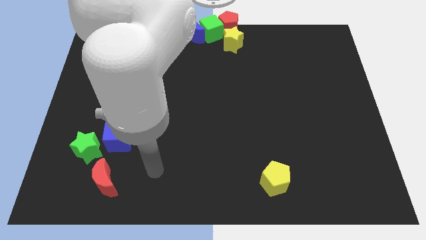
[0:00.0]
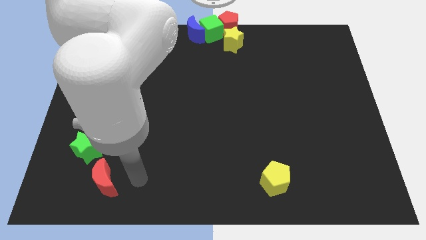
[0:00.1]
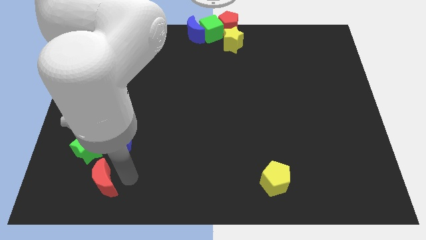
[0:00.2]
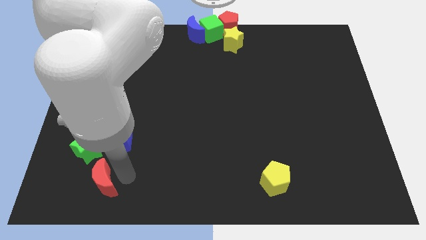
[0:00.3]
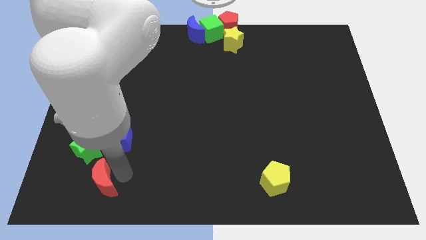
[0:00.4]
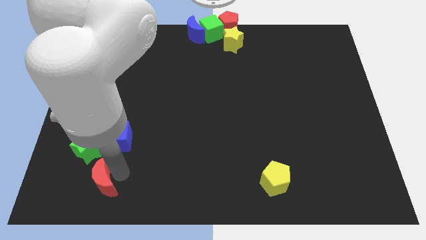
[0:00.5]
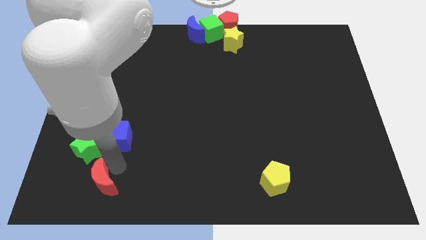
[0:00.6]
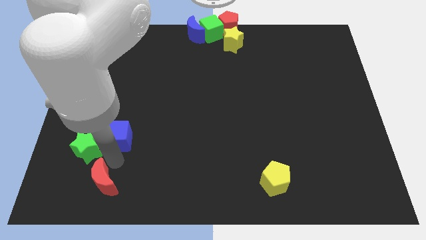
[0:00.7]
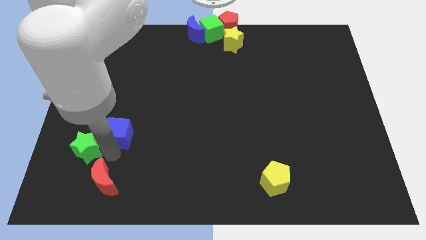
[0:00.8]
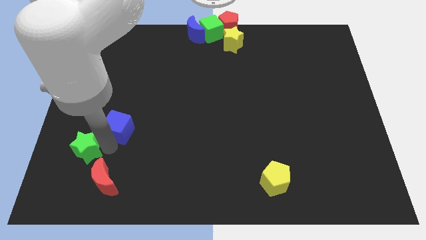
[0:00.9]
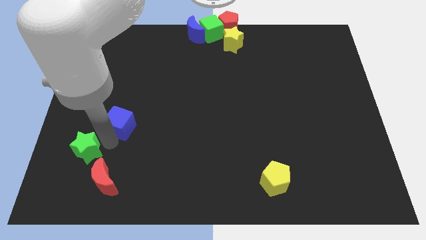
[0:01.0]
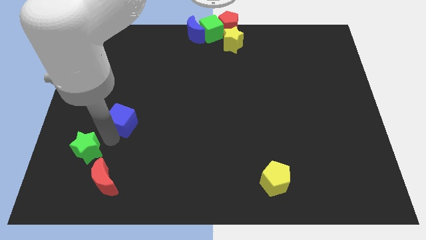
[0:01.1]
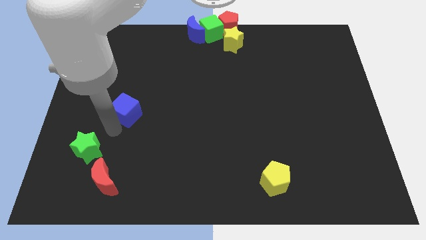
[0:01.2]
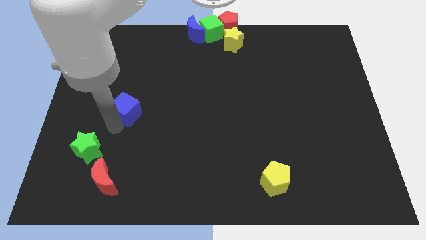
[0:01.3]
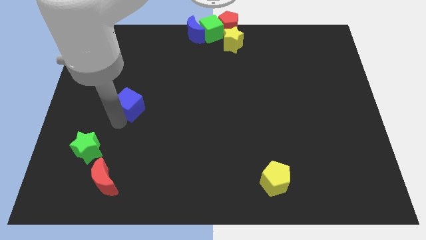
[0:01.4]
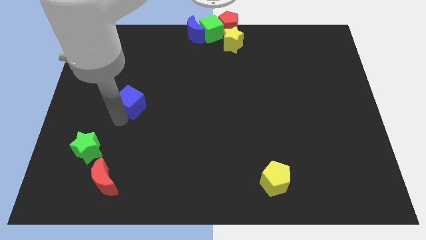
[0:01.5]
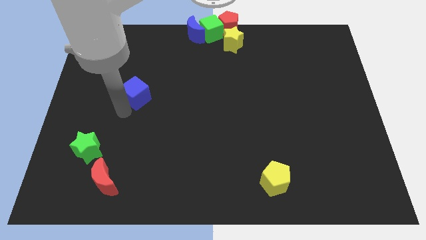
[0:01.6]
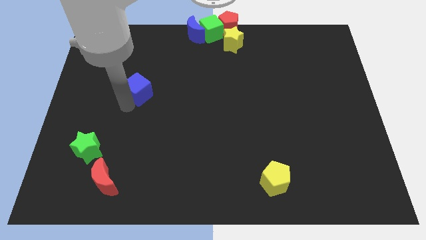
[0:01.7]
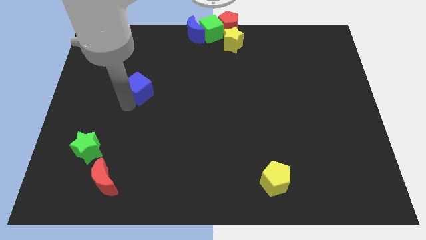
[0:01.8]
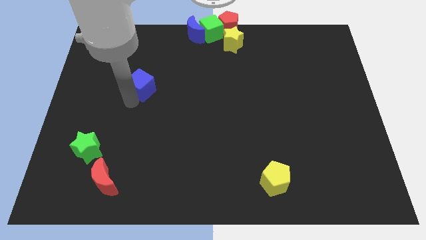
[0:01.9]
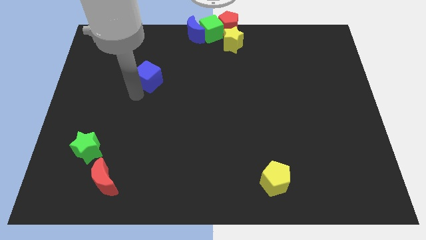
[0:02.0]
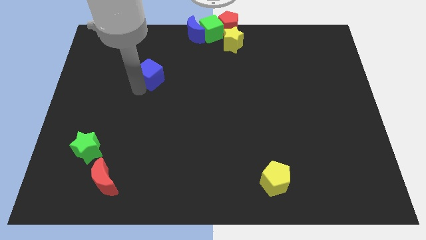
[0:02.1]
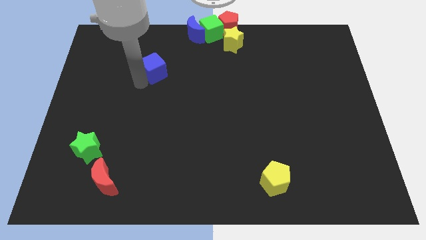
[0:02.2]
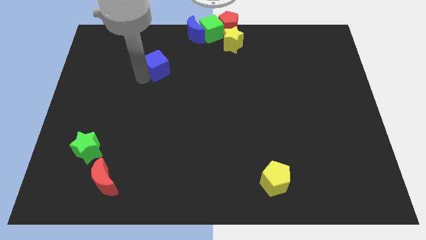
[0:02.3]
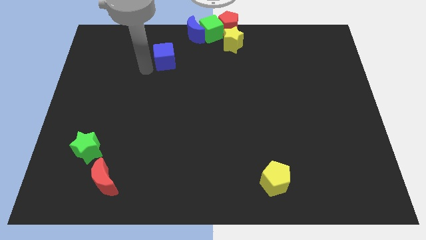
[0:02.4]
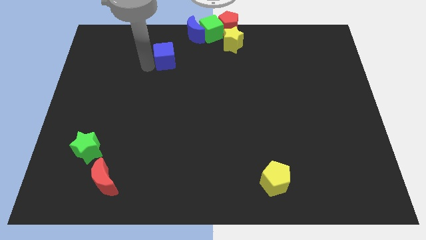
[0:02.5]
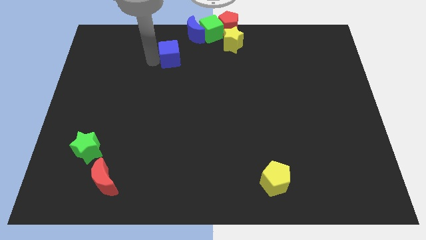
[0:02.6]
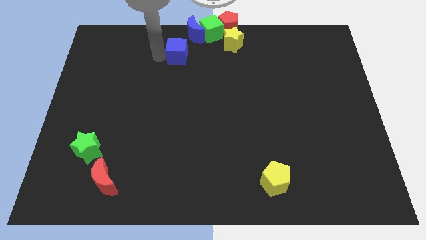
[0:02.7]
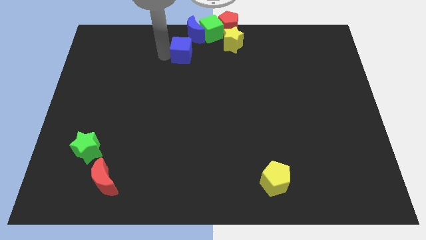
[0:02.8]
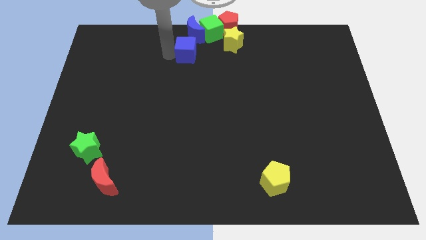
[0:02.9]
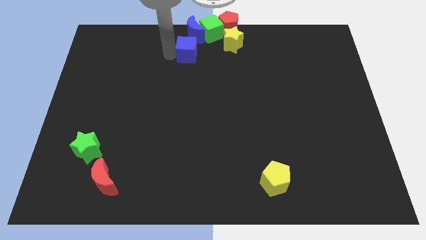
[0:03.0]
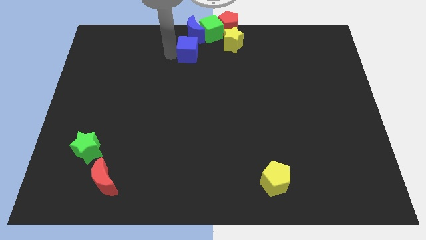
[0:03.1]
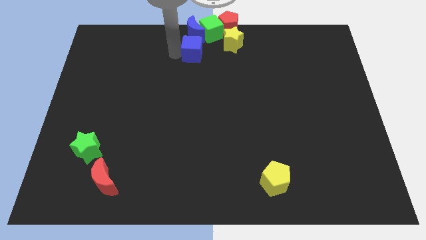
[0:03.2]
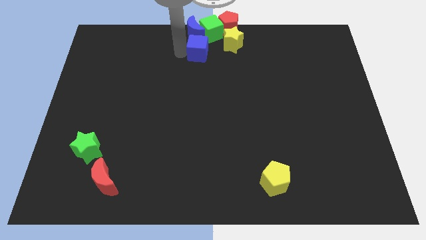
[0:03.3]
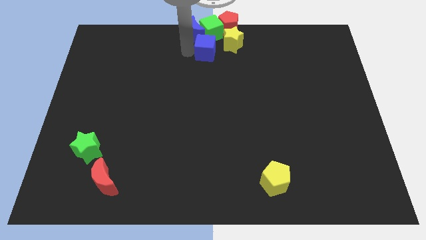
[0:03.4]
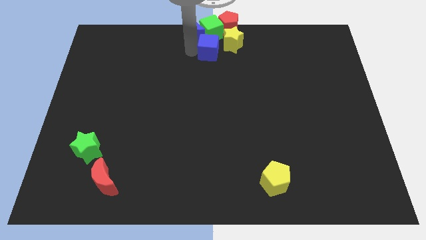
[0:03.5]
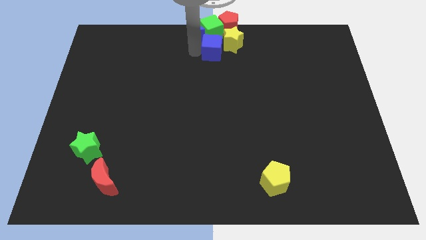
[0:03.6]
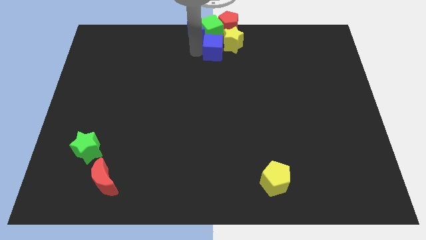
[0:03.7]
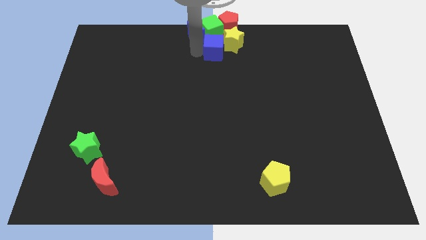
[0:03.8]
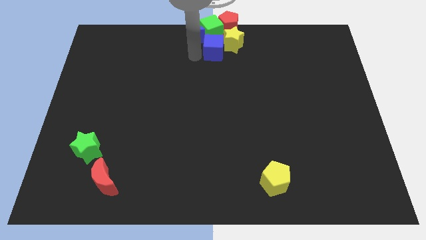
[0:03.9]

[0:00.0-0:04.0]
place the blue cube down to the green cube

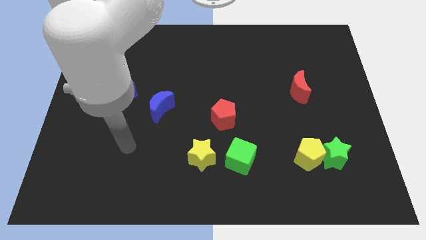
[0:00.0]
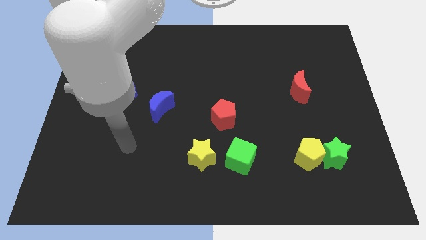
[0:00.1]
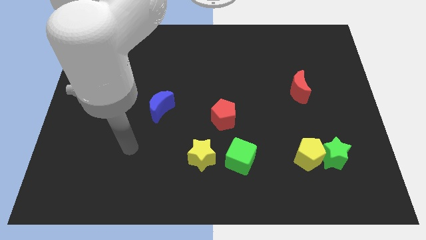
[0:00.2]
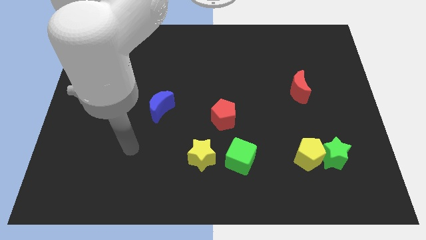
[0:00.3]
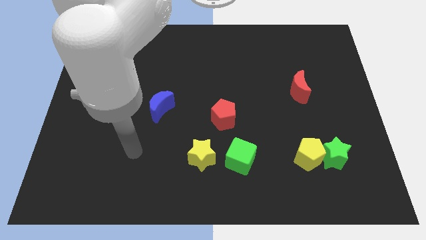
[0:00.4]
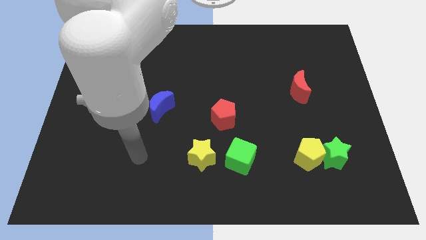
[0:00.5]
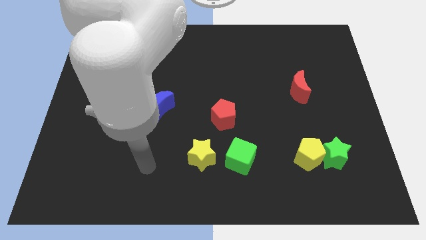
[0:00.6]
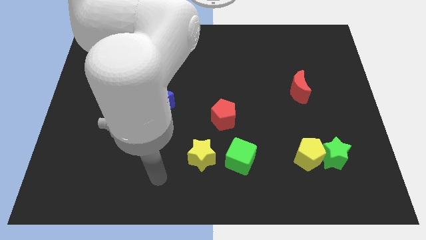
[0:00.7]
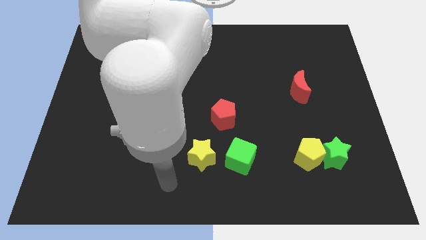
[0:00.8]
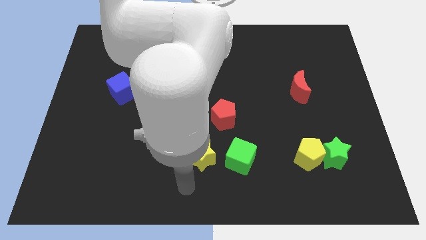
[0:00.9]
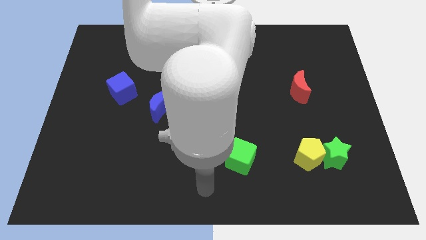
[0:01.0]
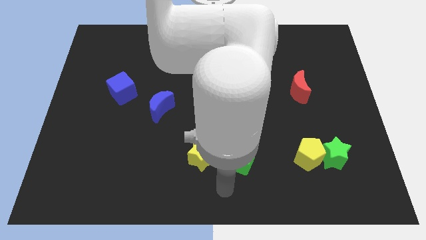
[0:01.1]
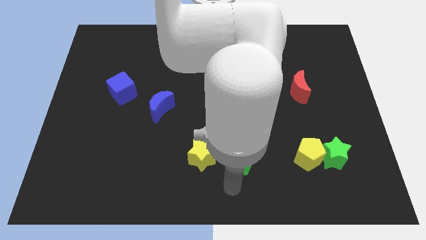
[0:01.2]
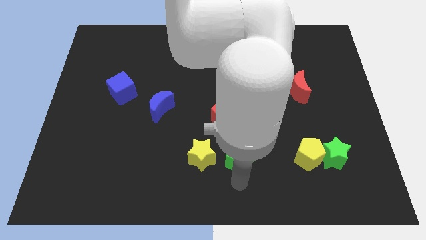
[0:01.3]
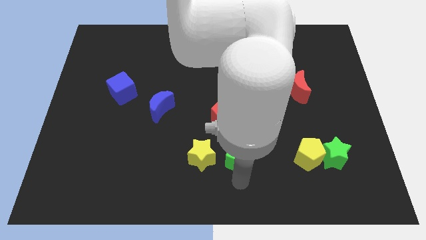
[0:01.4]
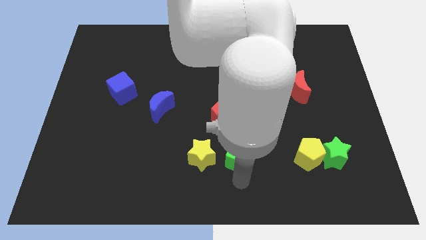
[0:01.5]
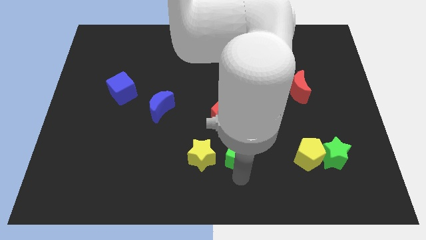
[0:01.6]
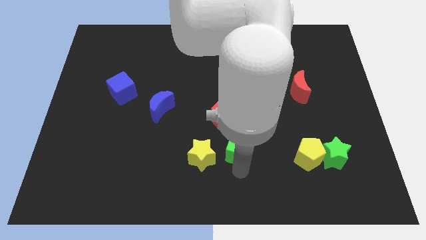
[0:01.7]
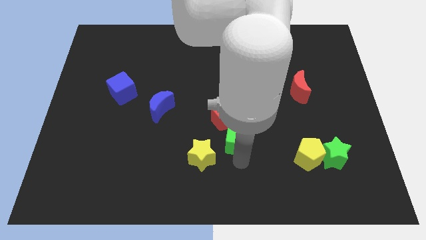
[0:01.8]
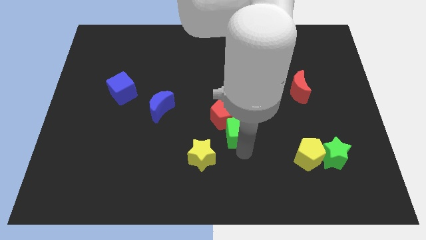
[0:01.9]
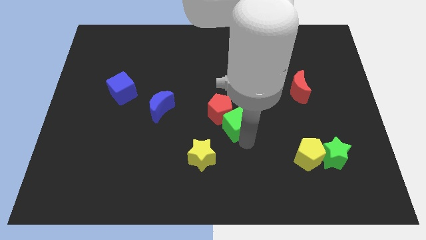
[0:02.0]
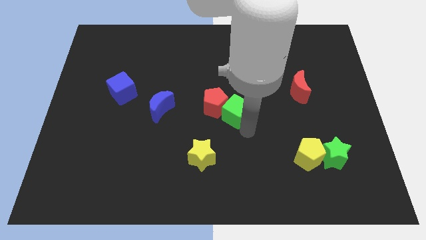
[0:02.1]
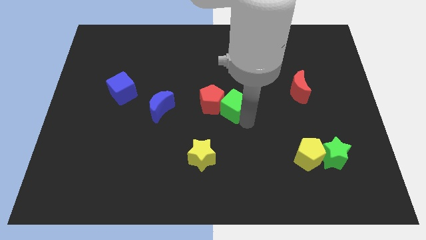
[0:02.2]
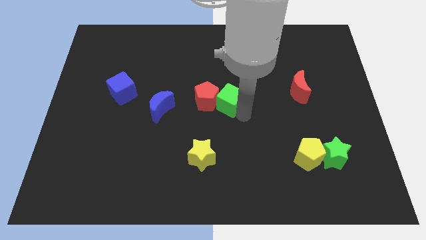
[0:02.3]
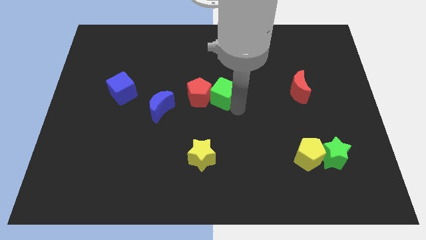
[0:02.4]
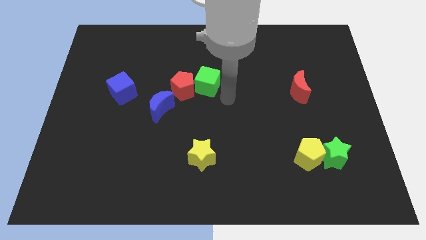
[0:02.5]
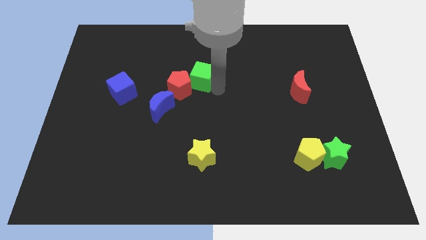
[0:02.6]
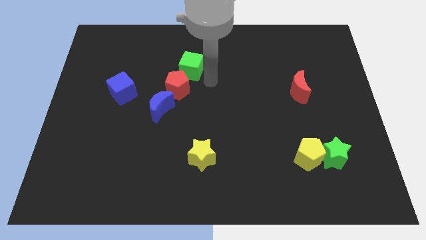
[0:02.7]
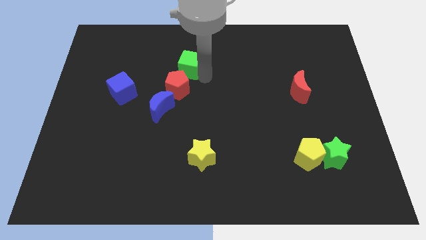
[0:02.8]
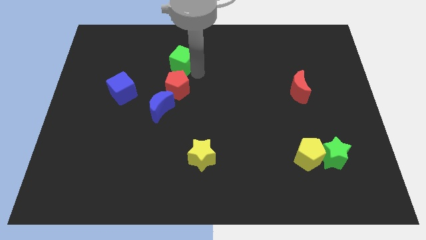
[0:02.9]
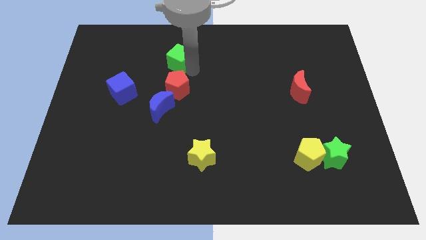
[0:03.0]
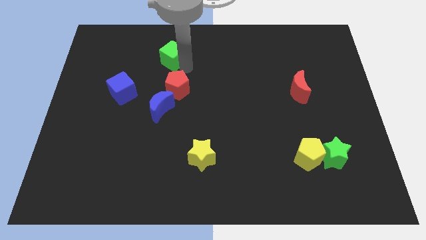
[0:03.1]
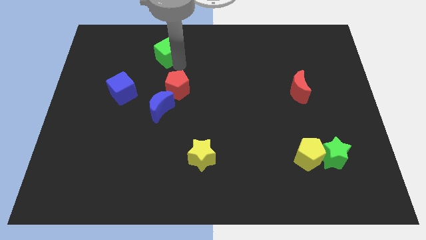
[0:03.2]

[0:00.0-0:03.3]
place the green cube at the top of the red pentagon

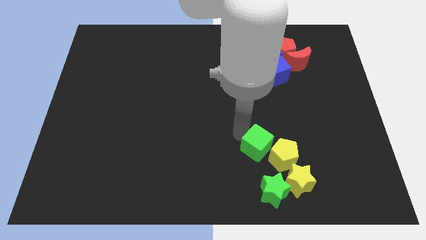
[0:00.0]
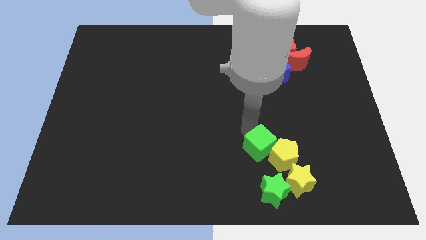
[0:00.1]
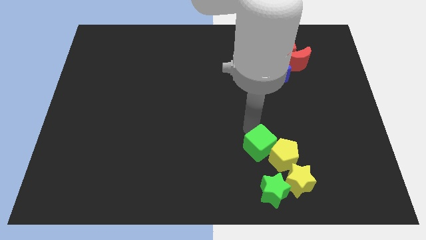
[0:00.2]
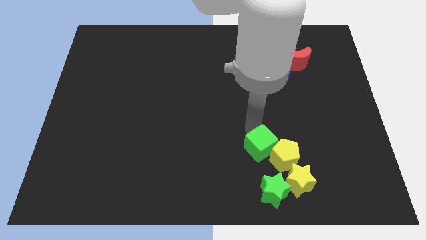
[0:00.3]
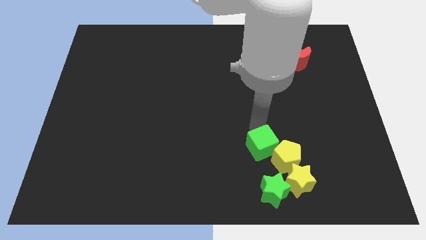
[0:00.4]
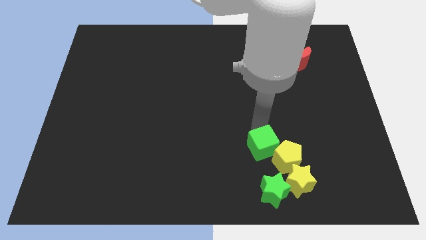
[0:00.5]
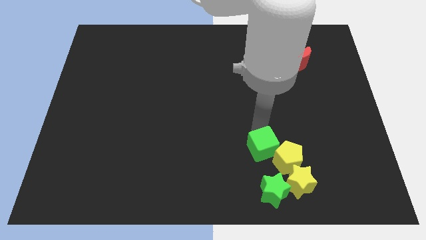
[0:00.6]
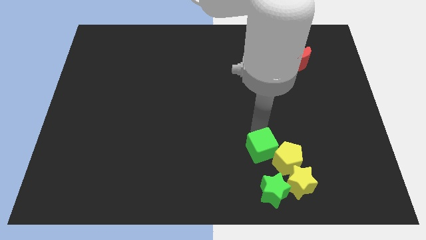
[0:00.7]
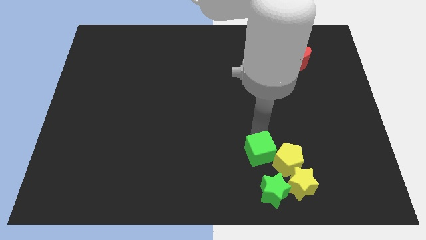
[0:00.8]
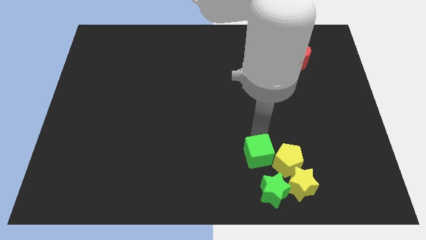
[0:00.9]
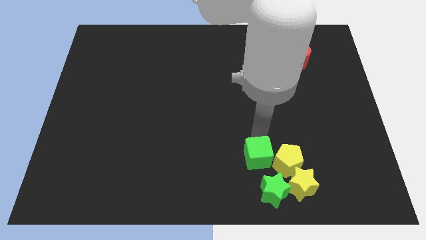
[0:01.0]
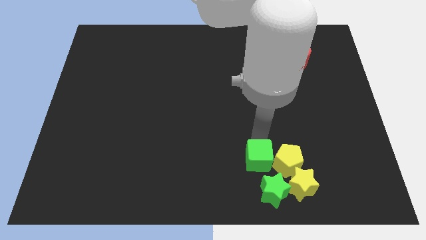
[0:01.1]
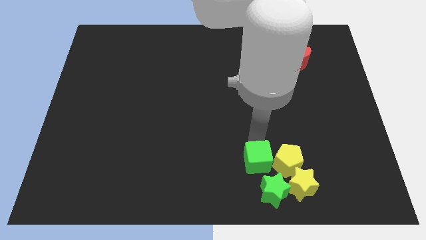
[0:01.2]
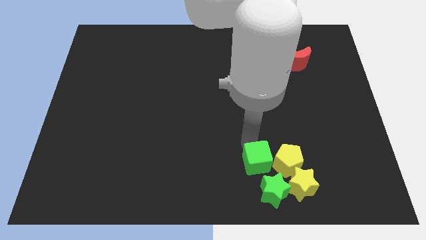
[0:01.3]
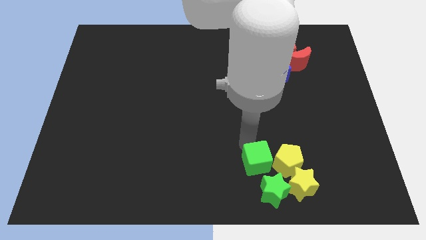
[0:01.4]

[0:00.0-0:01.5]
push the green cube into the yellow pentagon

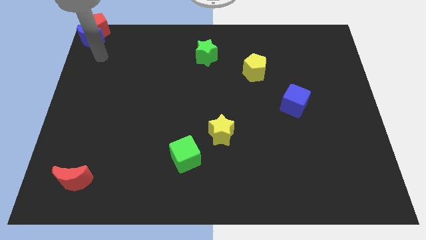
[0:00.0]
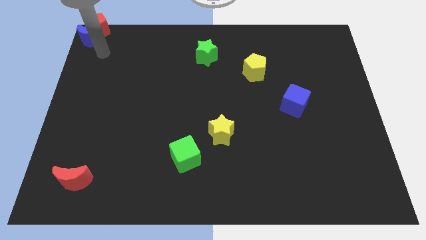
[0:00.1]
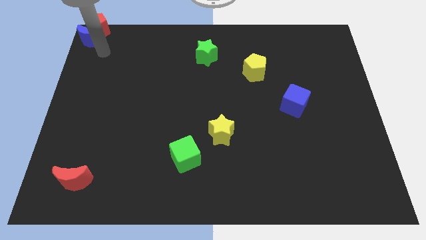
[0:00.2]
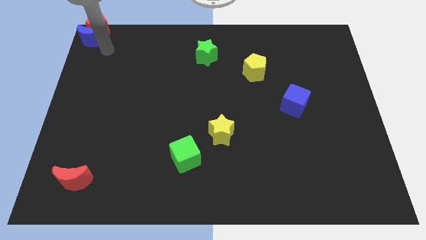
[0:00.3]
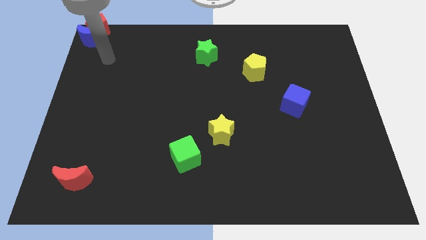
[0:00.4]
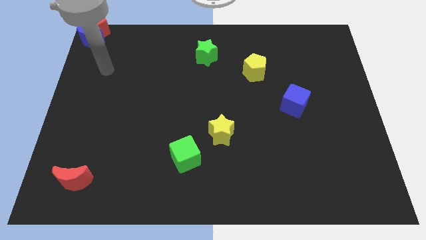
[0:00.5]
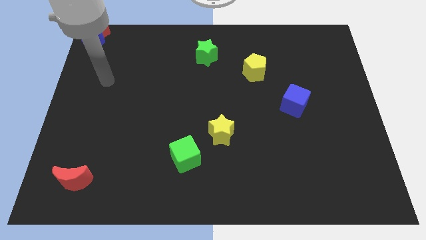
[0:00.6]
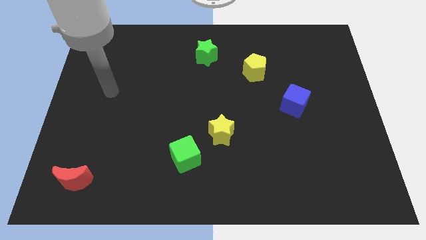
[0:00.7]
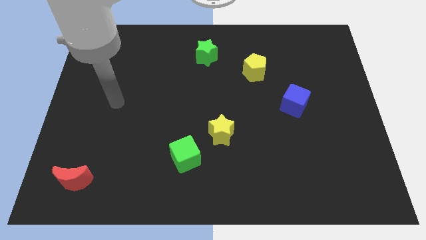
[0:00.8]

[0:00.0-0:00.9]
move your arm away from blue moon
